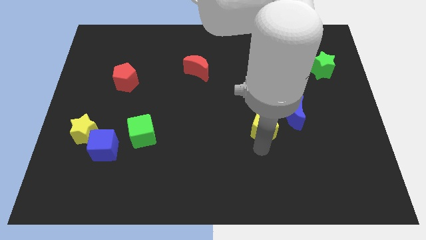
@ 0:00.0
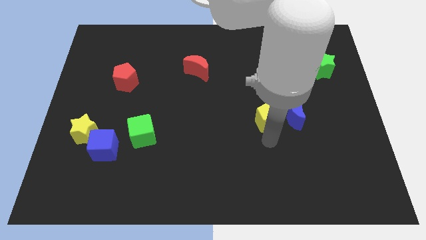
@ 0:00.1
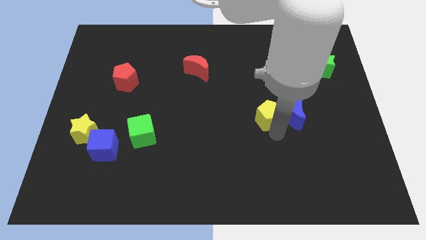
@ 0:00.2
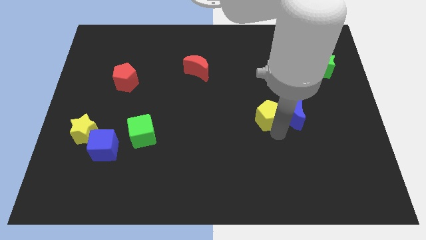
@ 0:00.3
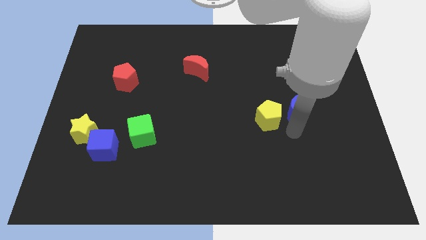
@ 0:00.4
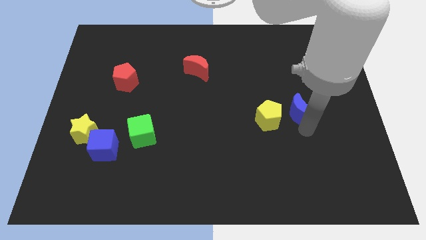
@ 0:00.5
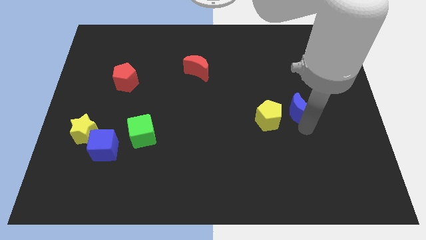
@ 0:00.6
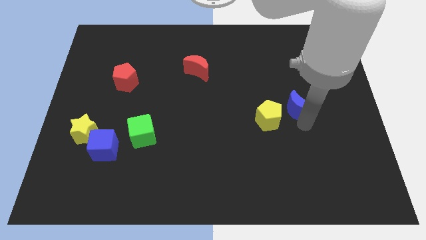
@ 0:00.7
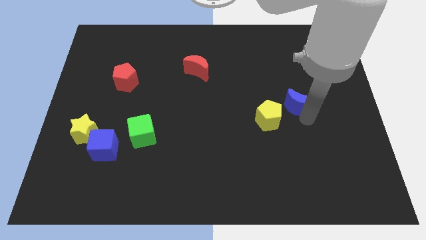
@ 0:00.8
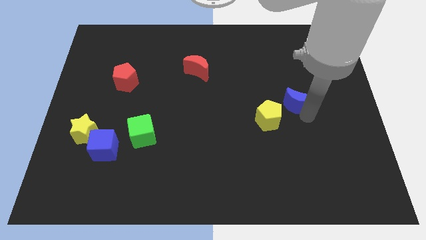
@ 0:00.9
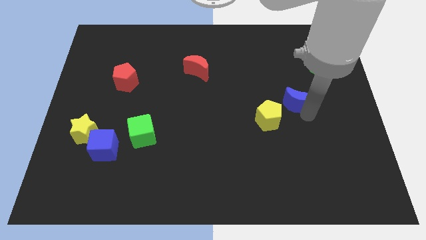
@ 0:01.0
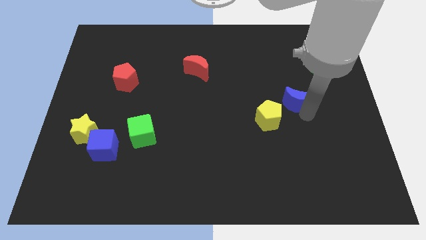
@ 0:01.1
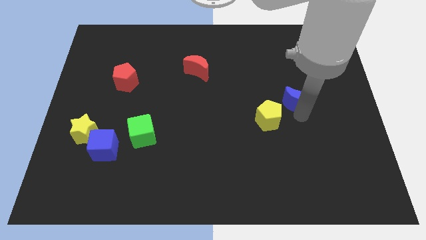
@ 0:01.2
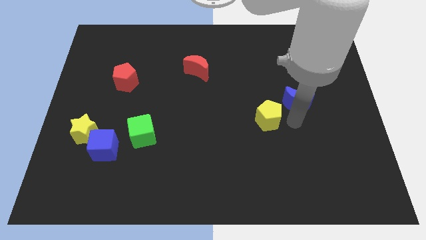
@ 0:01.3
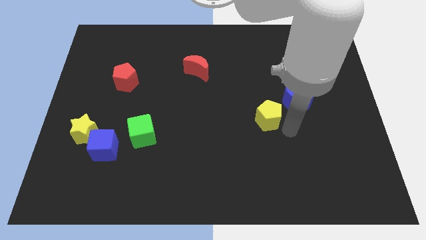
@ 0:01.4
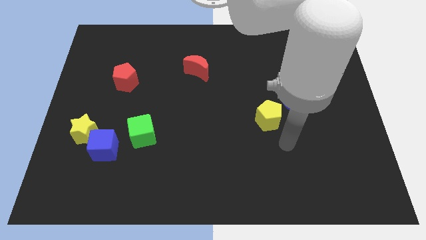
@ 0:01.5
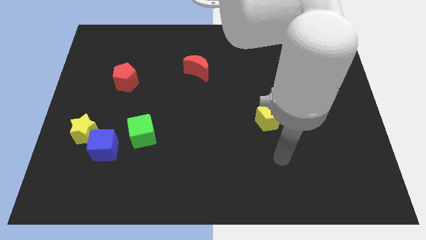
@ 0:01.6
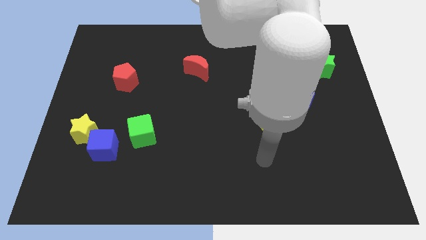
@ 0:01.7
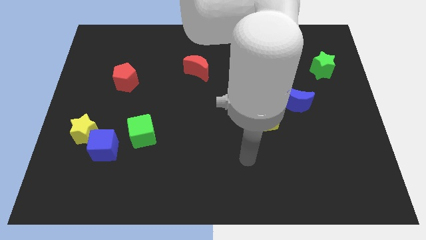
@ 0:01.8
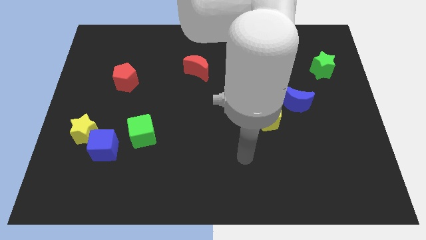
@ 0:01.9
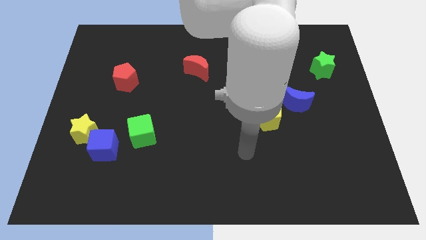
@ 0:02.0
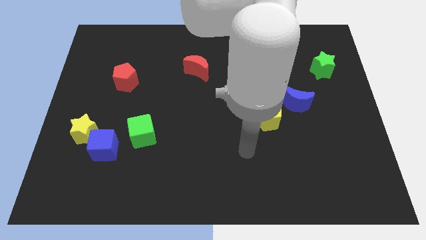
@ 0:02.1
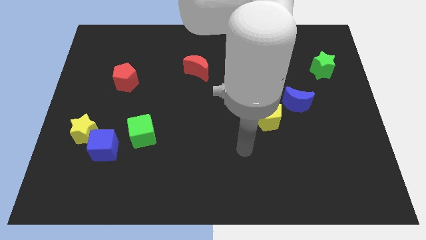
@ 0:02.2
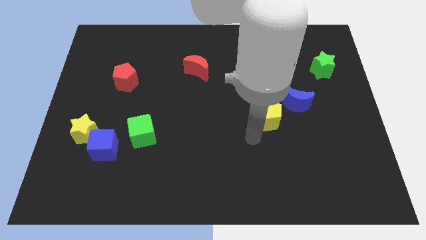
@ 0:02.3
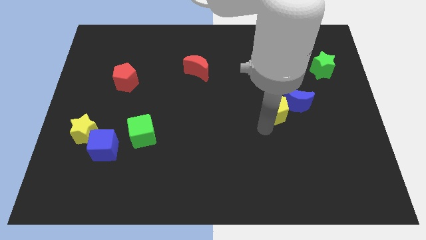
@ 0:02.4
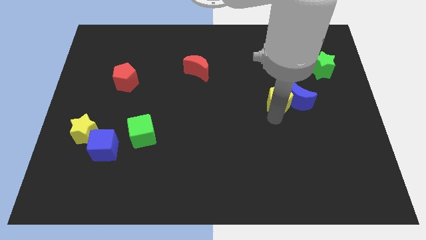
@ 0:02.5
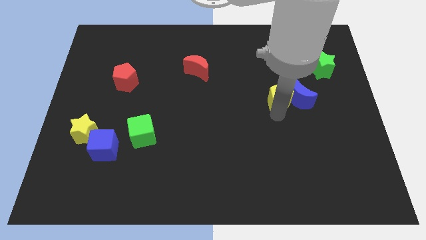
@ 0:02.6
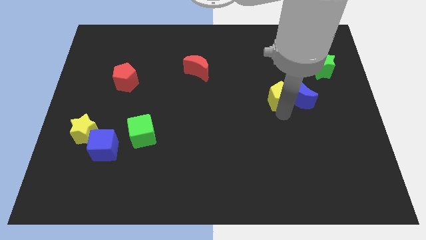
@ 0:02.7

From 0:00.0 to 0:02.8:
push the yellow pentagon into the blue moon

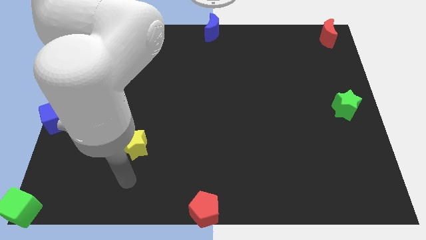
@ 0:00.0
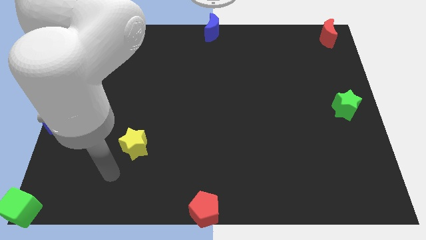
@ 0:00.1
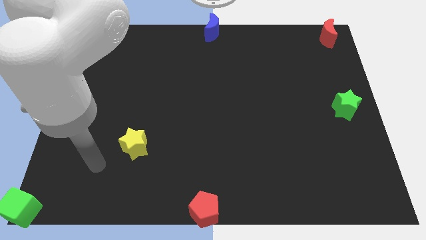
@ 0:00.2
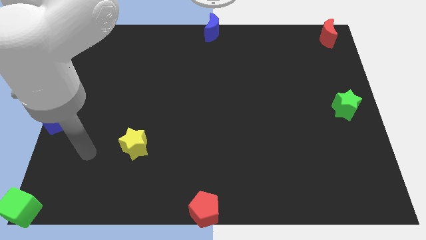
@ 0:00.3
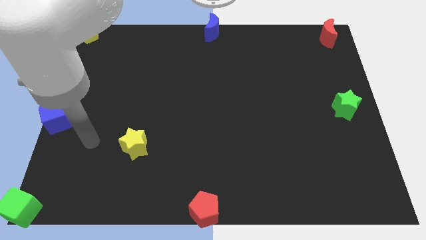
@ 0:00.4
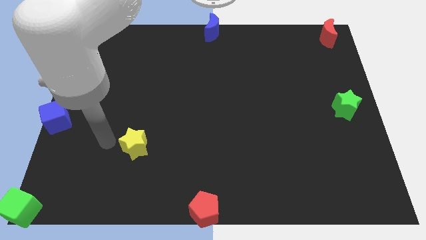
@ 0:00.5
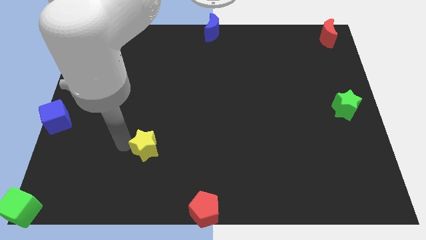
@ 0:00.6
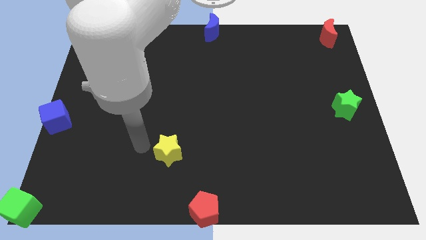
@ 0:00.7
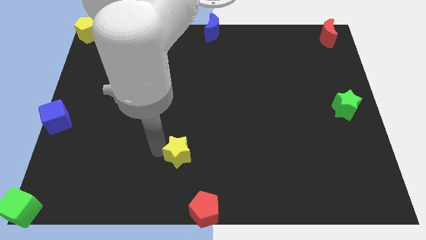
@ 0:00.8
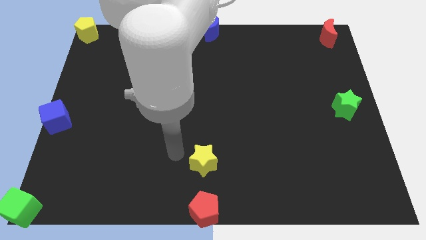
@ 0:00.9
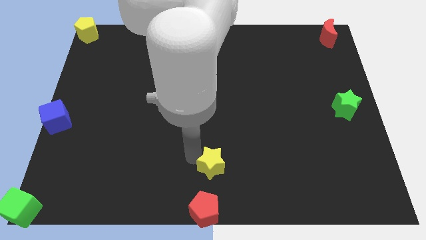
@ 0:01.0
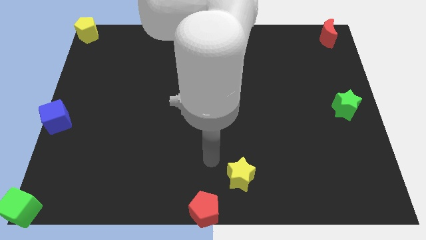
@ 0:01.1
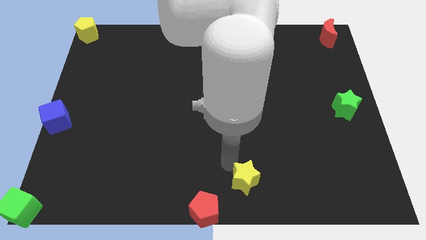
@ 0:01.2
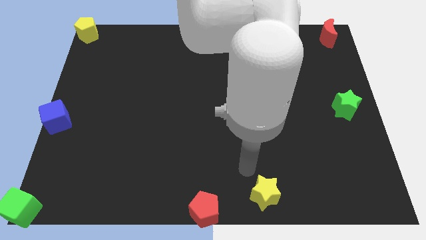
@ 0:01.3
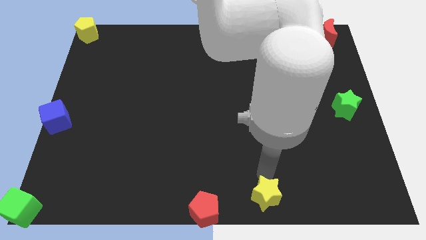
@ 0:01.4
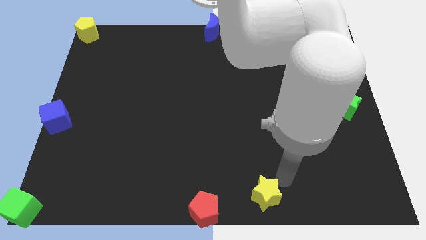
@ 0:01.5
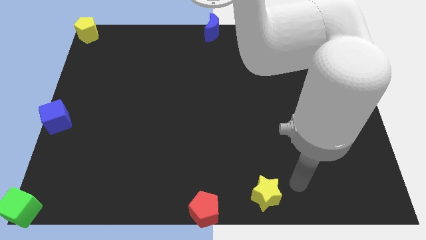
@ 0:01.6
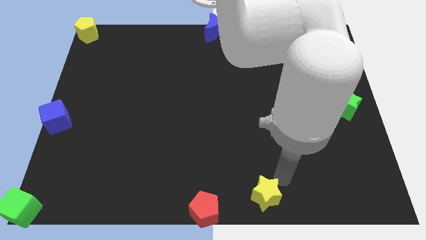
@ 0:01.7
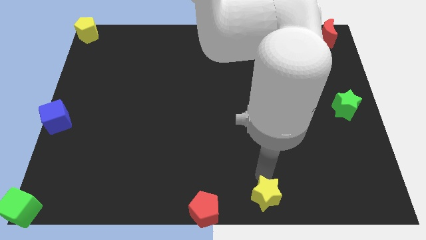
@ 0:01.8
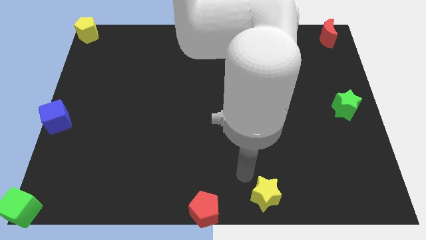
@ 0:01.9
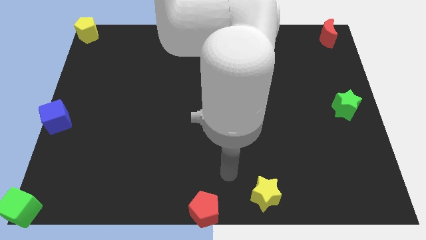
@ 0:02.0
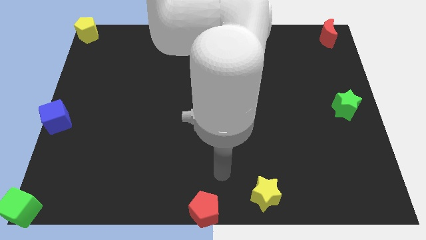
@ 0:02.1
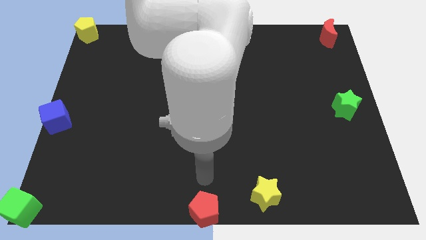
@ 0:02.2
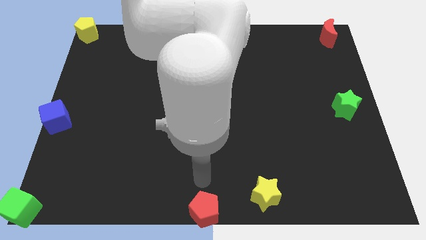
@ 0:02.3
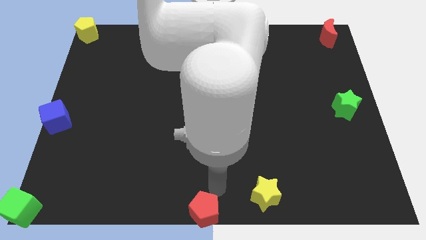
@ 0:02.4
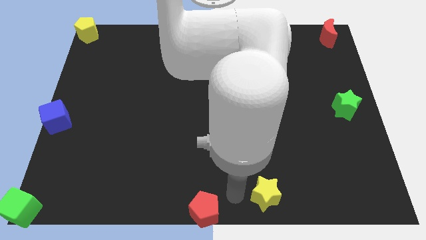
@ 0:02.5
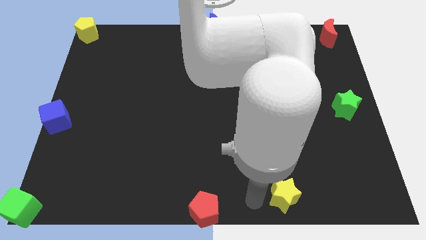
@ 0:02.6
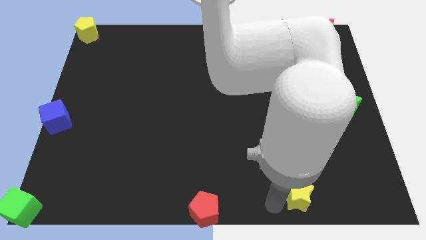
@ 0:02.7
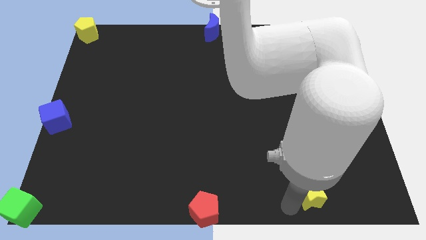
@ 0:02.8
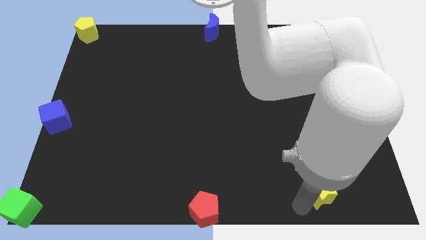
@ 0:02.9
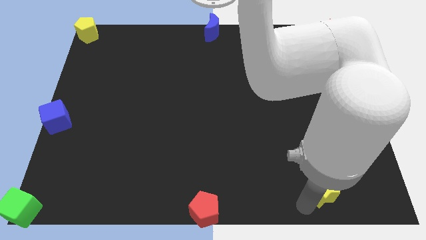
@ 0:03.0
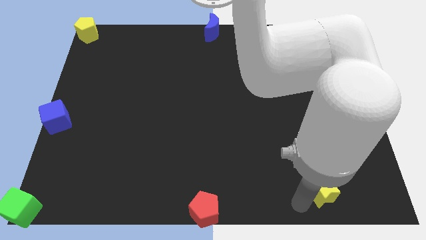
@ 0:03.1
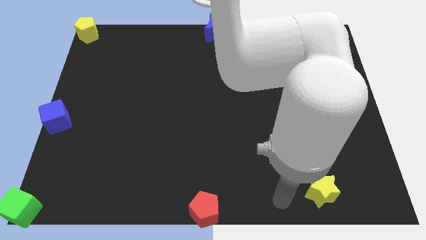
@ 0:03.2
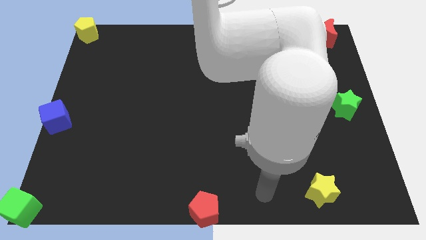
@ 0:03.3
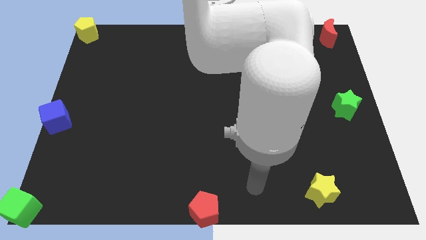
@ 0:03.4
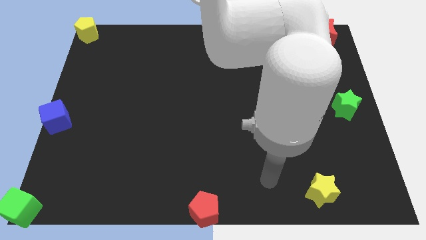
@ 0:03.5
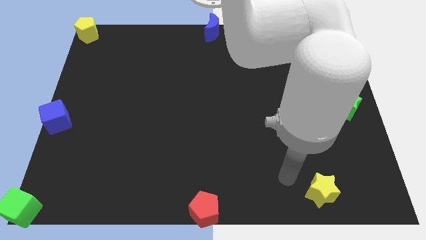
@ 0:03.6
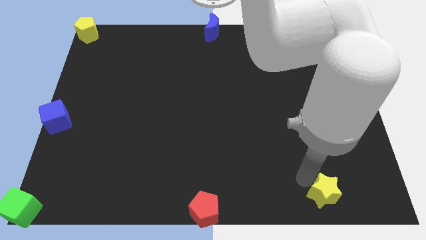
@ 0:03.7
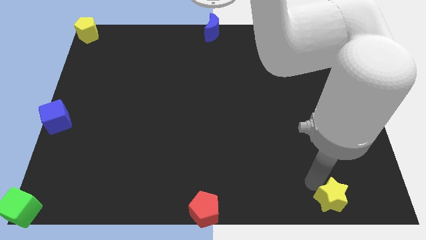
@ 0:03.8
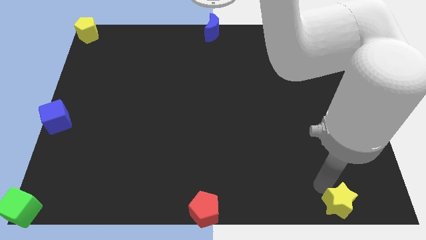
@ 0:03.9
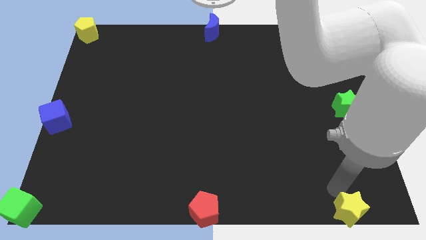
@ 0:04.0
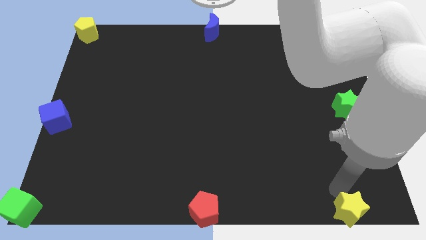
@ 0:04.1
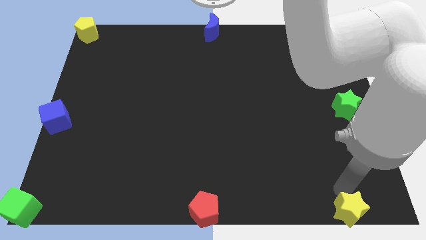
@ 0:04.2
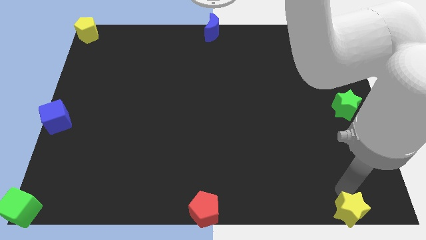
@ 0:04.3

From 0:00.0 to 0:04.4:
move the yellow star to the bottom right of the board

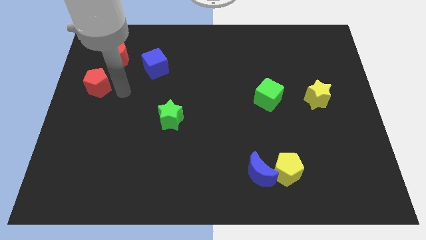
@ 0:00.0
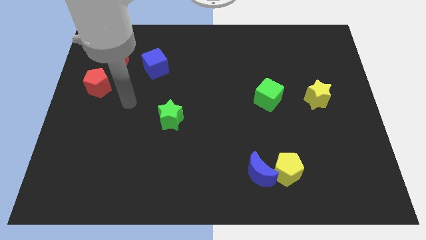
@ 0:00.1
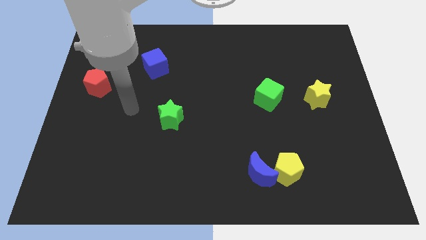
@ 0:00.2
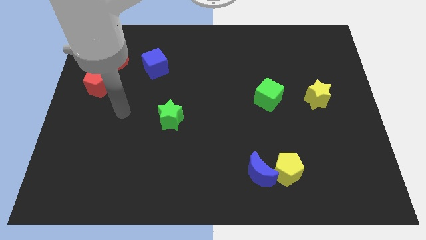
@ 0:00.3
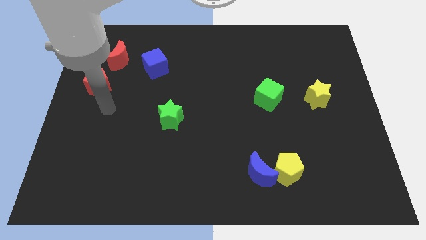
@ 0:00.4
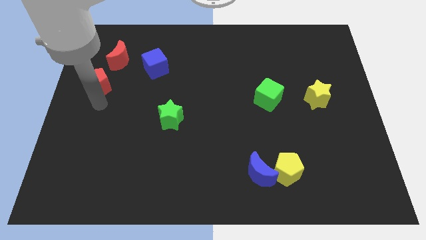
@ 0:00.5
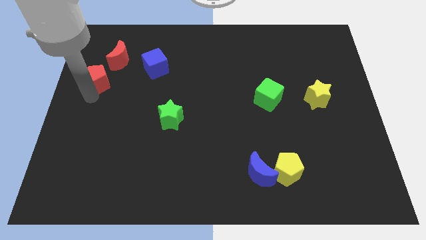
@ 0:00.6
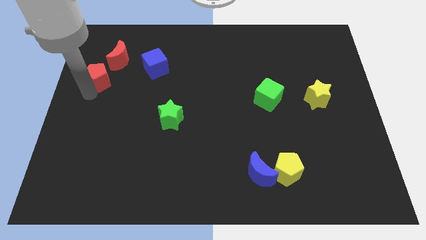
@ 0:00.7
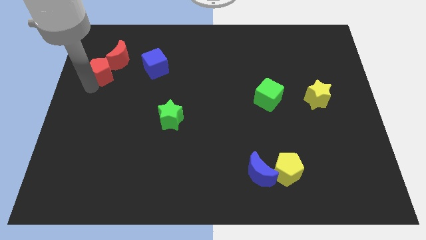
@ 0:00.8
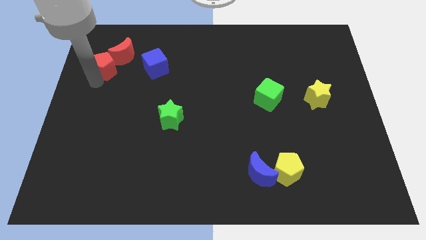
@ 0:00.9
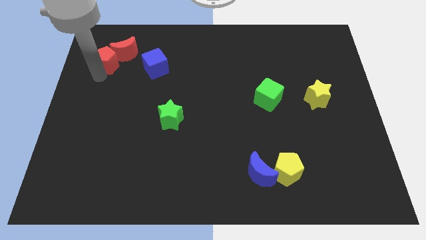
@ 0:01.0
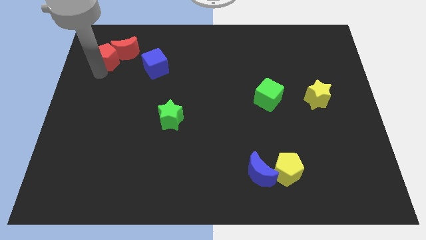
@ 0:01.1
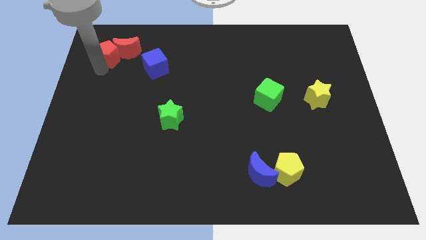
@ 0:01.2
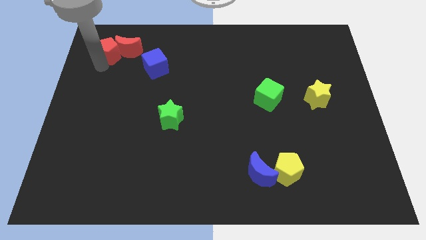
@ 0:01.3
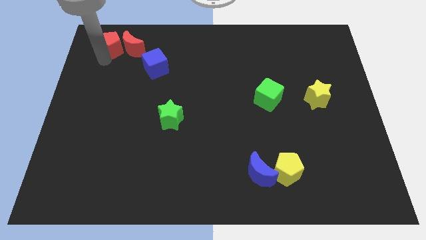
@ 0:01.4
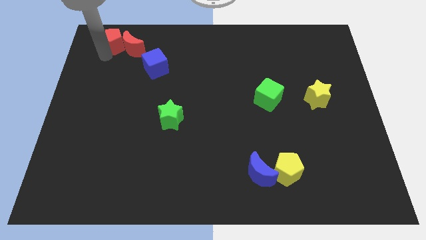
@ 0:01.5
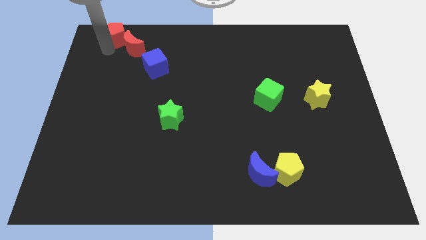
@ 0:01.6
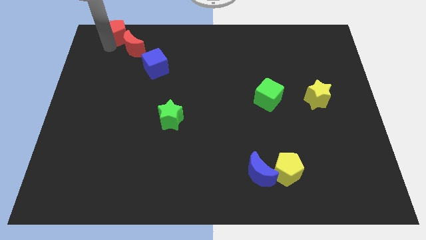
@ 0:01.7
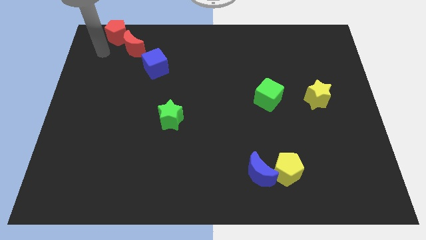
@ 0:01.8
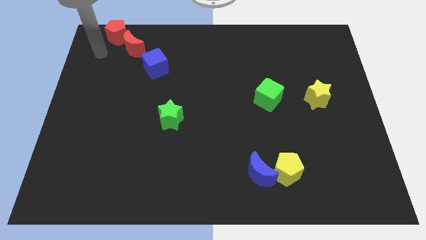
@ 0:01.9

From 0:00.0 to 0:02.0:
push the red pentagon to the top side of the board
